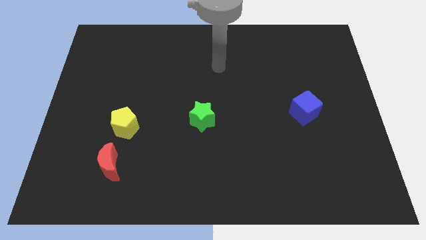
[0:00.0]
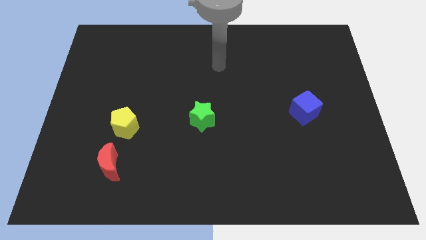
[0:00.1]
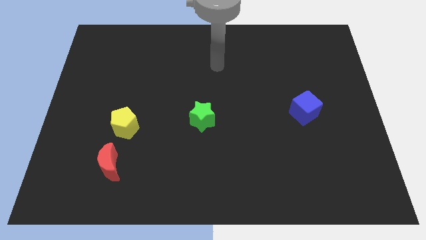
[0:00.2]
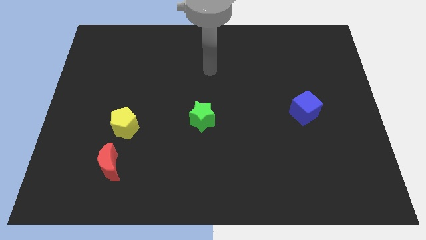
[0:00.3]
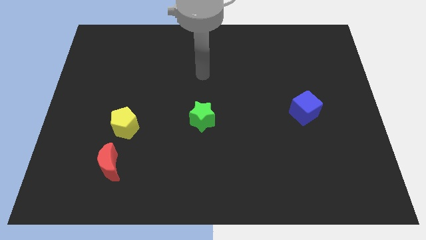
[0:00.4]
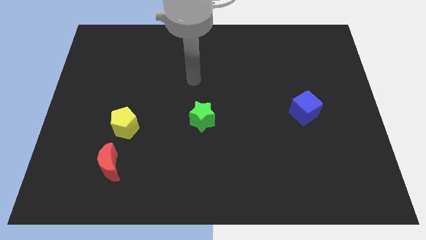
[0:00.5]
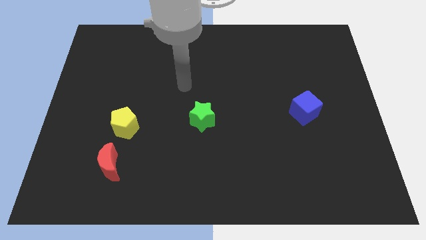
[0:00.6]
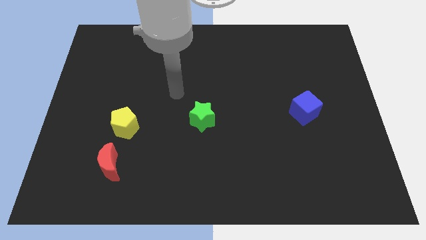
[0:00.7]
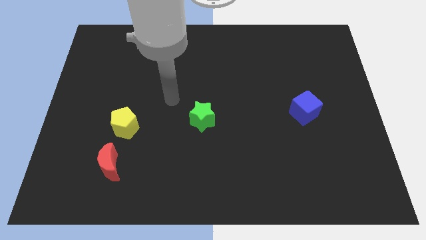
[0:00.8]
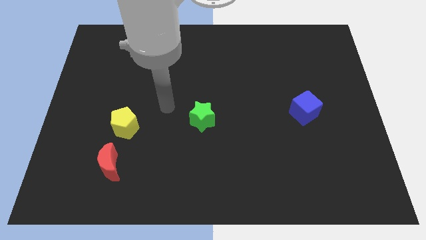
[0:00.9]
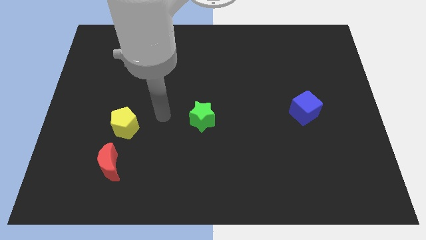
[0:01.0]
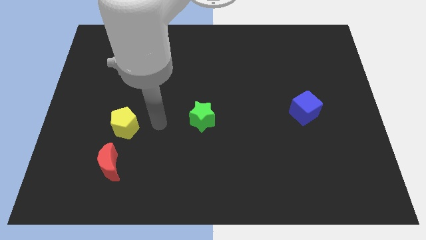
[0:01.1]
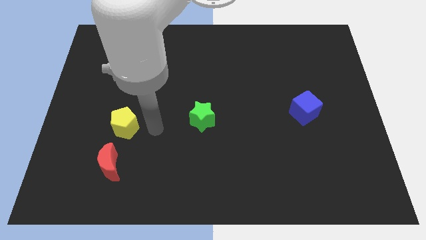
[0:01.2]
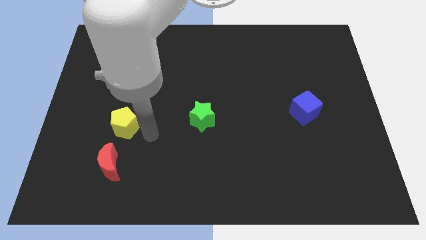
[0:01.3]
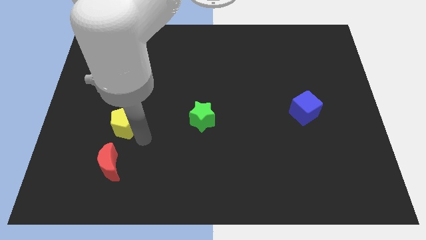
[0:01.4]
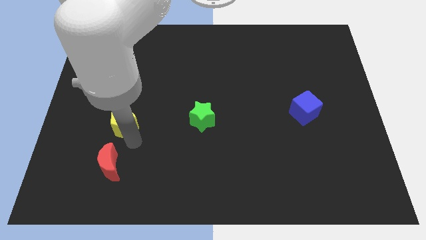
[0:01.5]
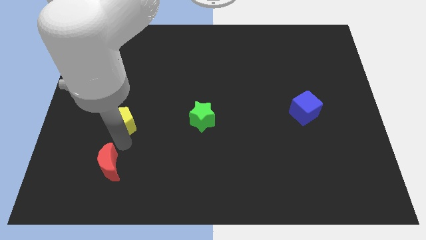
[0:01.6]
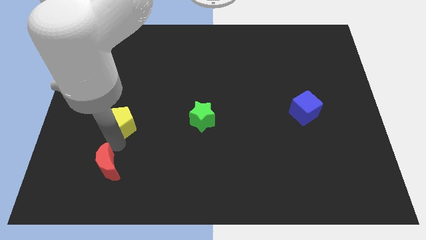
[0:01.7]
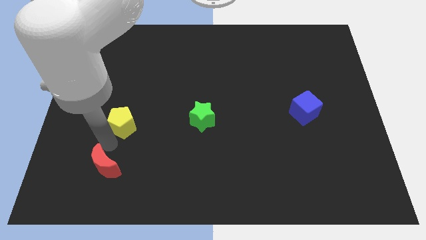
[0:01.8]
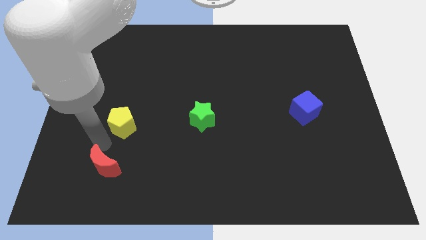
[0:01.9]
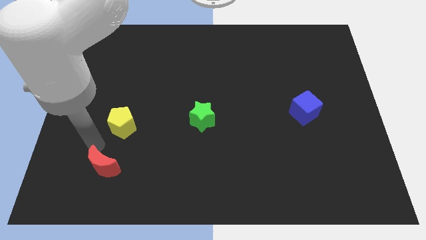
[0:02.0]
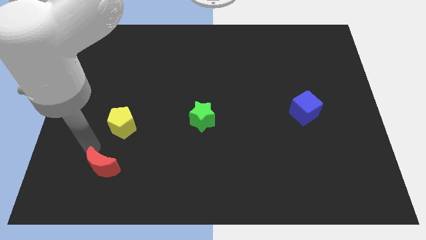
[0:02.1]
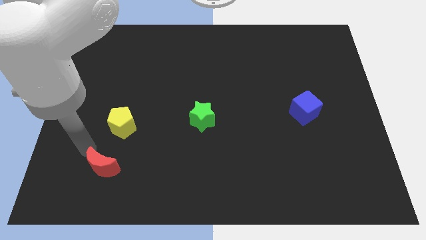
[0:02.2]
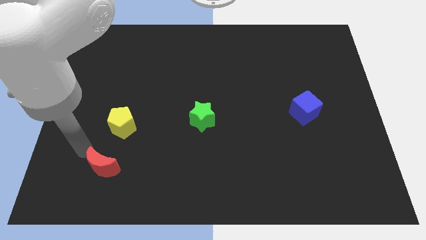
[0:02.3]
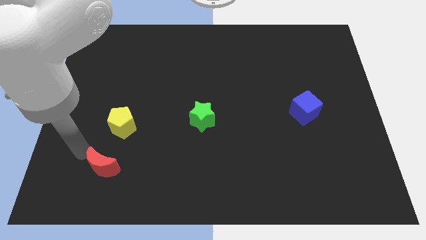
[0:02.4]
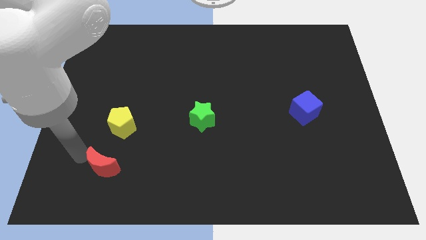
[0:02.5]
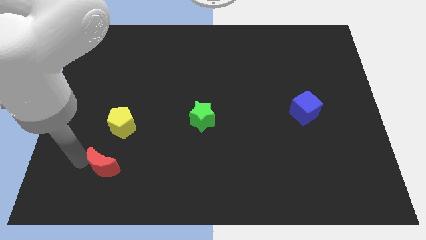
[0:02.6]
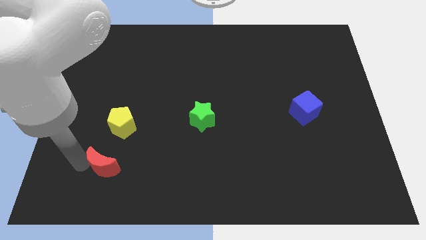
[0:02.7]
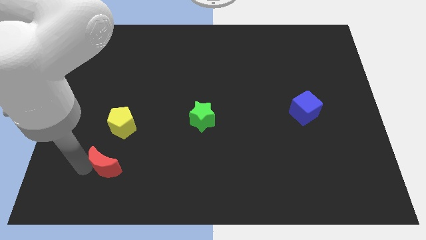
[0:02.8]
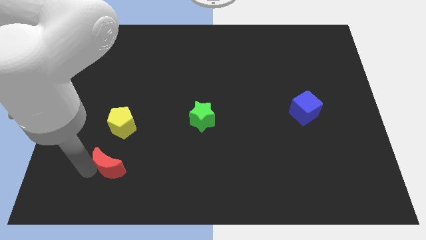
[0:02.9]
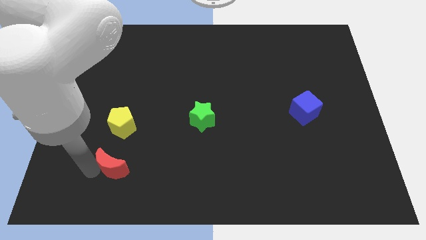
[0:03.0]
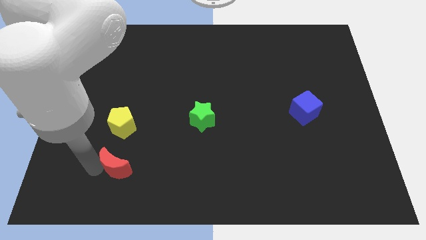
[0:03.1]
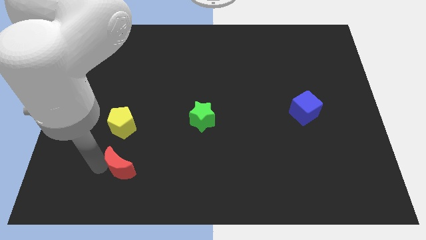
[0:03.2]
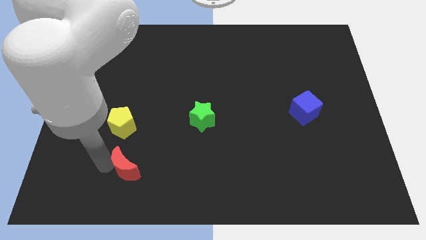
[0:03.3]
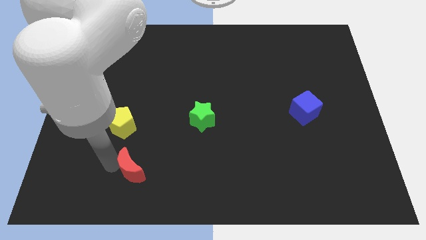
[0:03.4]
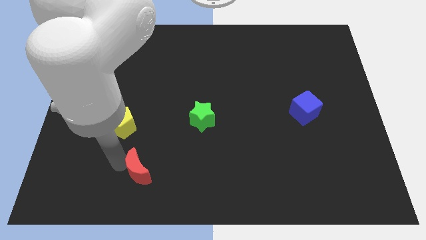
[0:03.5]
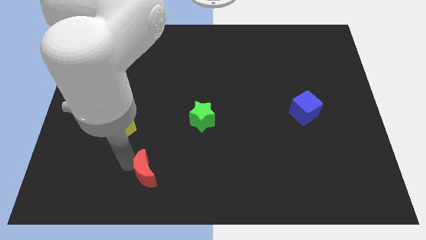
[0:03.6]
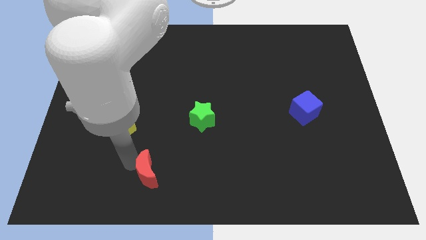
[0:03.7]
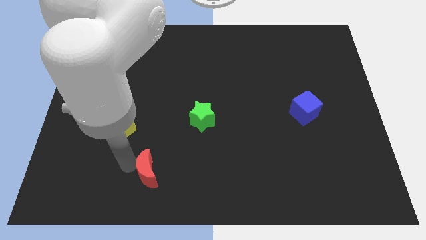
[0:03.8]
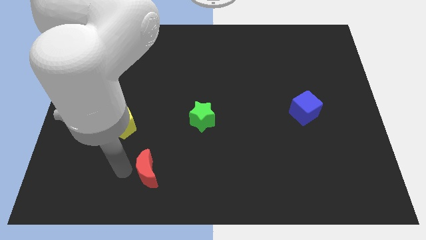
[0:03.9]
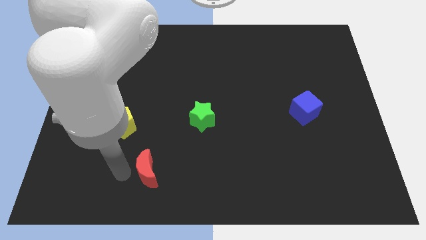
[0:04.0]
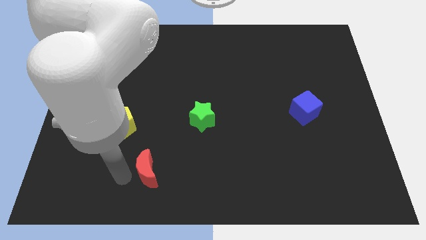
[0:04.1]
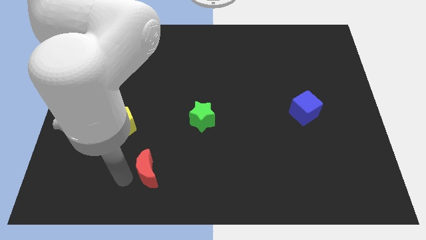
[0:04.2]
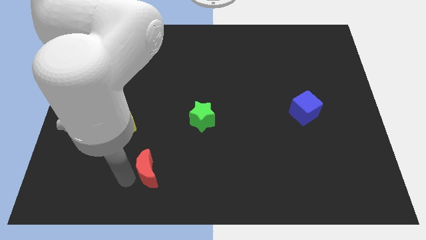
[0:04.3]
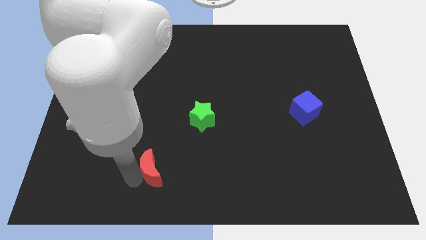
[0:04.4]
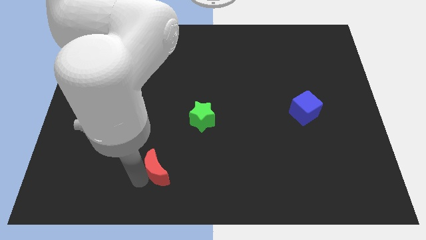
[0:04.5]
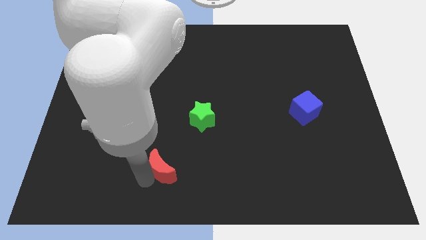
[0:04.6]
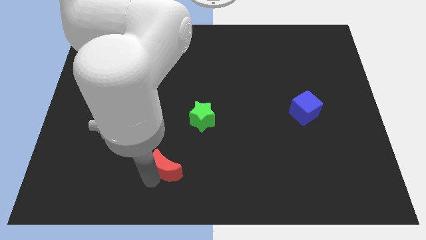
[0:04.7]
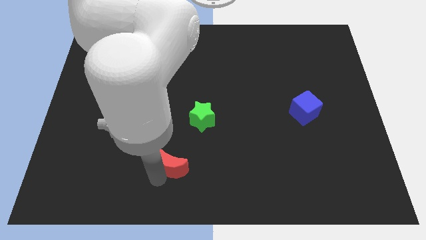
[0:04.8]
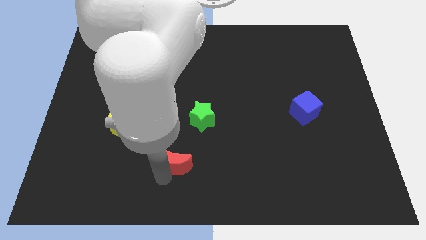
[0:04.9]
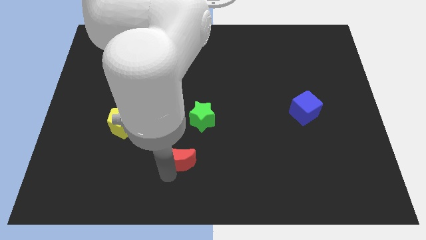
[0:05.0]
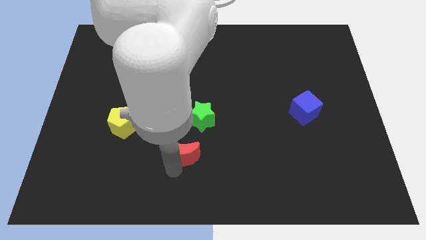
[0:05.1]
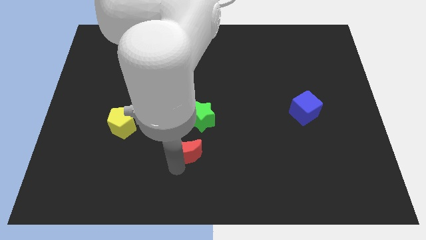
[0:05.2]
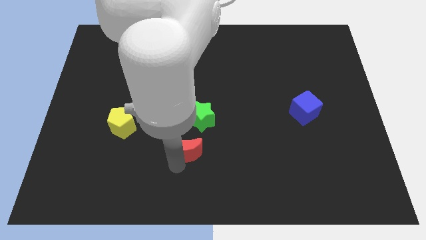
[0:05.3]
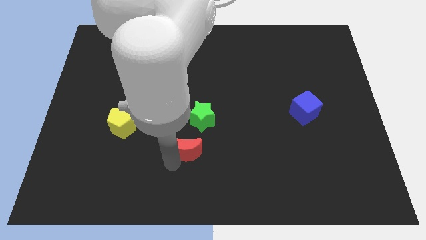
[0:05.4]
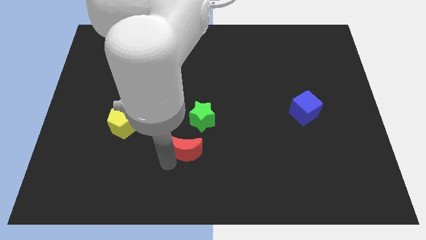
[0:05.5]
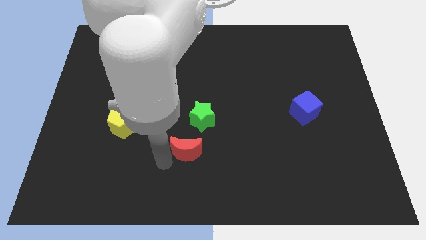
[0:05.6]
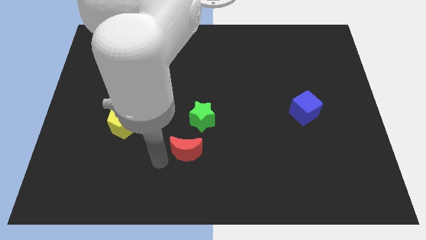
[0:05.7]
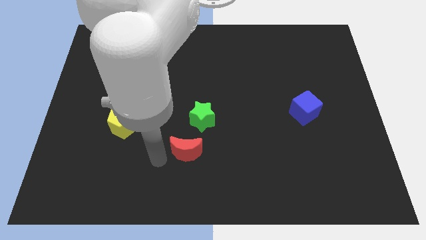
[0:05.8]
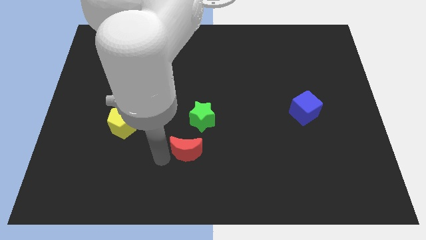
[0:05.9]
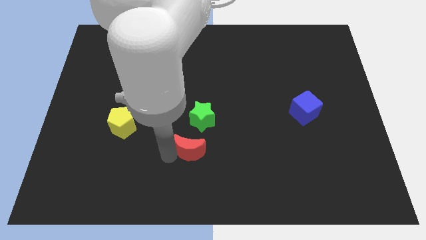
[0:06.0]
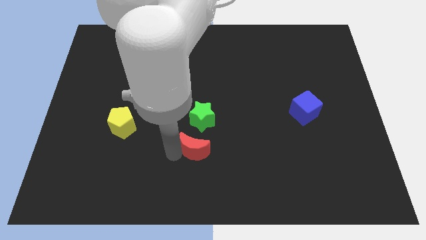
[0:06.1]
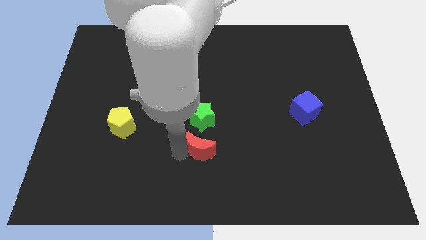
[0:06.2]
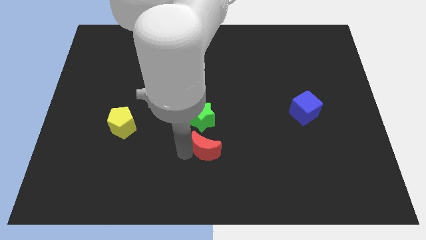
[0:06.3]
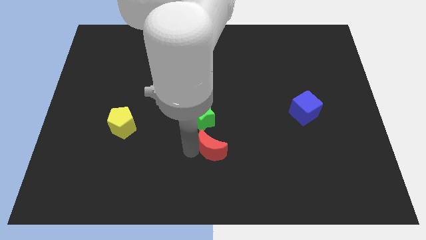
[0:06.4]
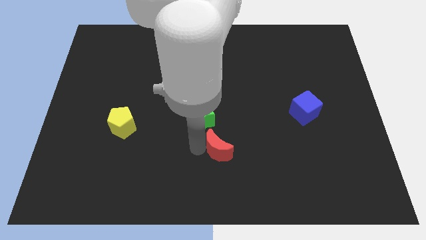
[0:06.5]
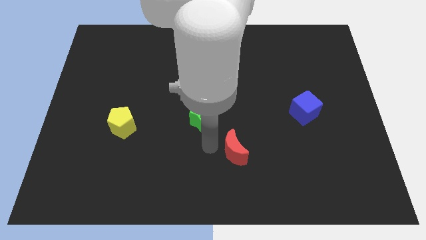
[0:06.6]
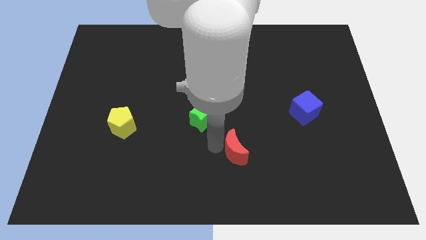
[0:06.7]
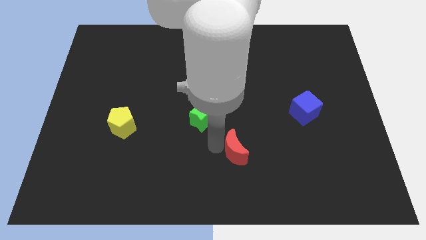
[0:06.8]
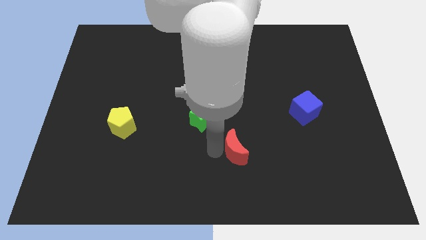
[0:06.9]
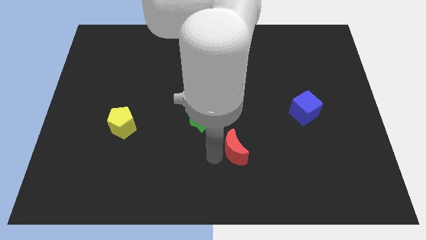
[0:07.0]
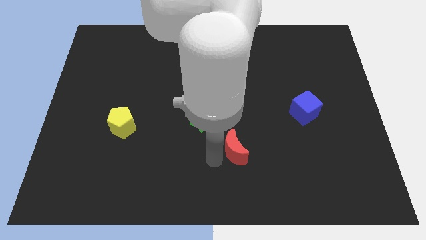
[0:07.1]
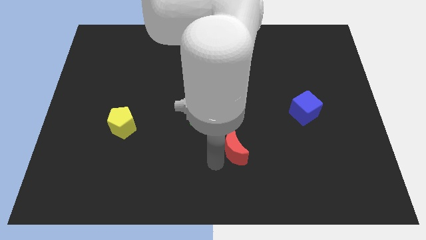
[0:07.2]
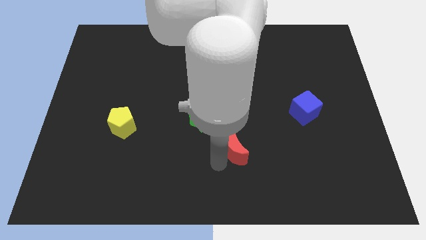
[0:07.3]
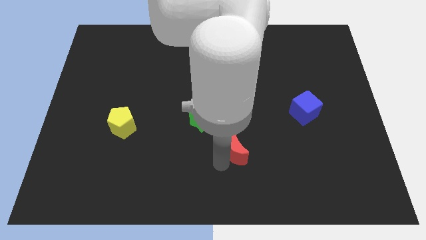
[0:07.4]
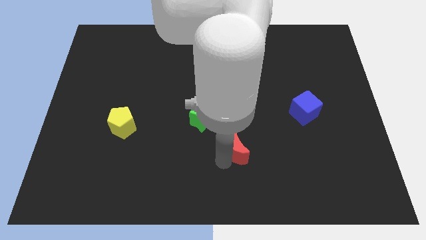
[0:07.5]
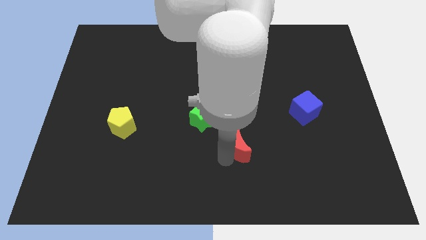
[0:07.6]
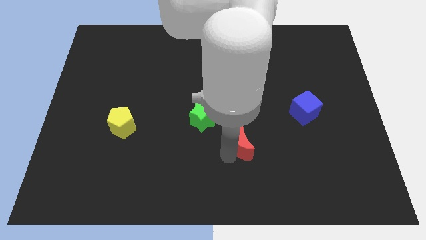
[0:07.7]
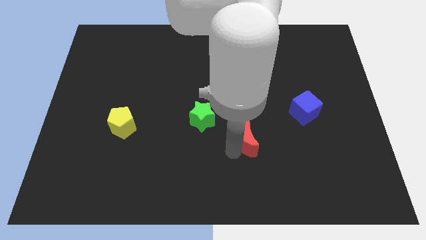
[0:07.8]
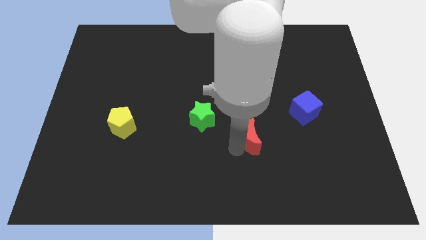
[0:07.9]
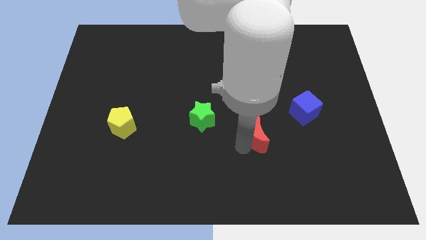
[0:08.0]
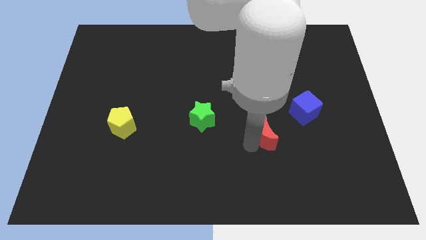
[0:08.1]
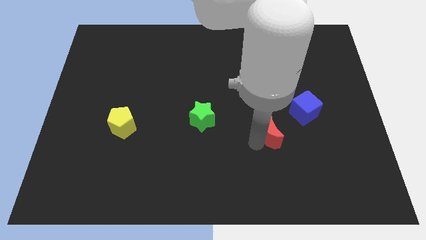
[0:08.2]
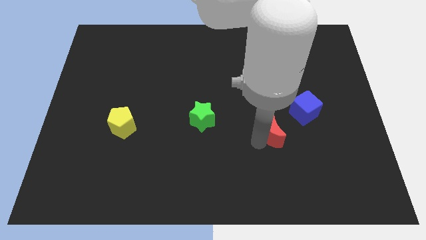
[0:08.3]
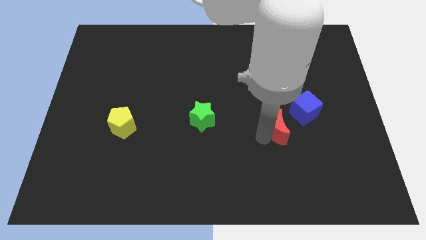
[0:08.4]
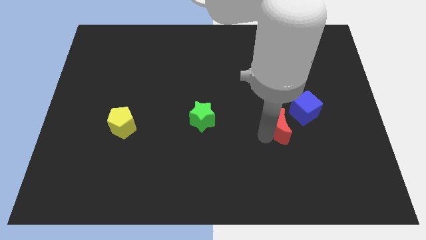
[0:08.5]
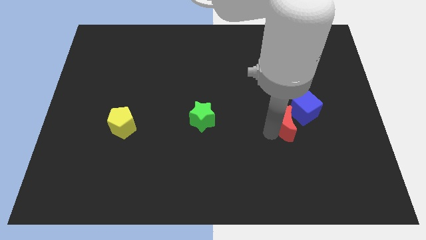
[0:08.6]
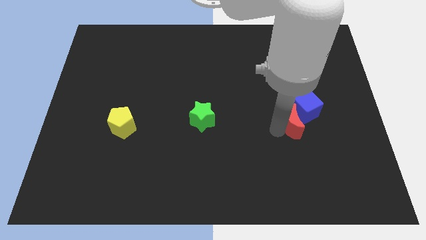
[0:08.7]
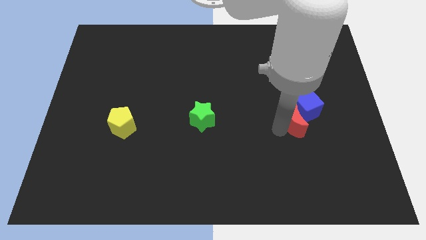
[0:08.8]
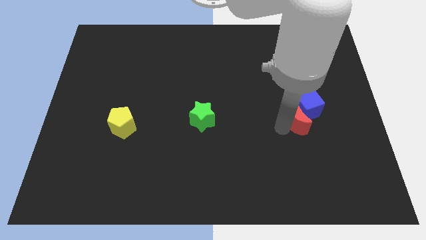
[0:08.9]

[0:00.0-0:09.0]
slide the moon to the blue cube
